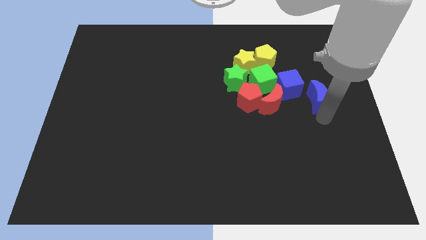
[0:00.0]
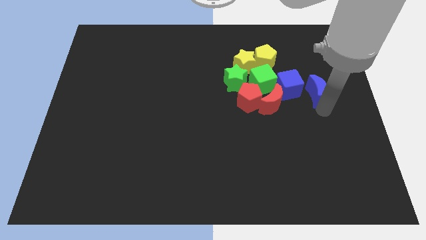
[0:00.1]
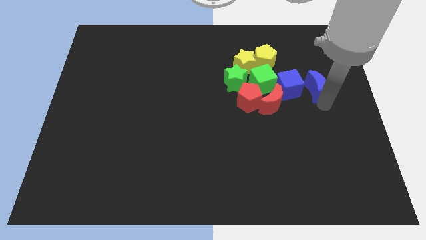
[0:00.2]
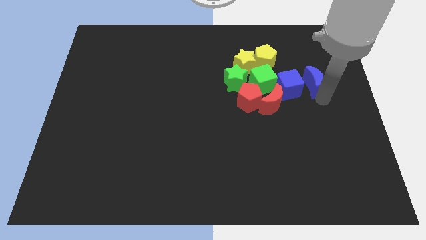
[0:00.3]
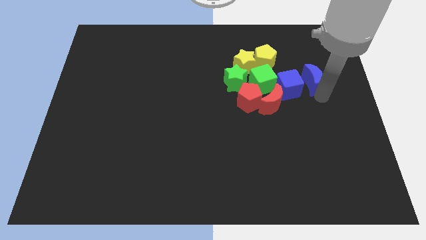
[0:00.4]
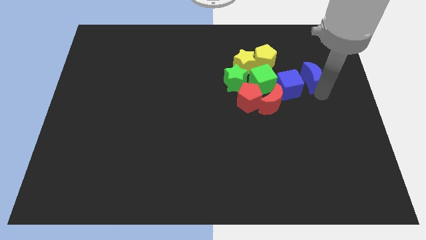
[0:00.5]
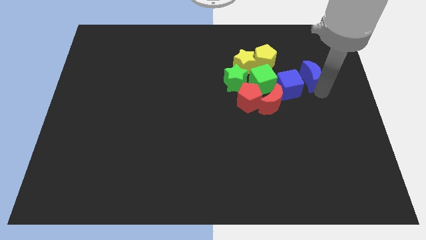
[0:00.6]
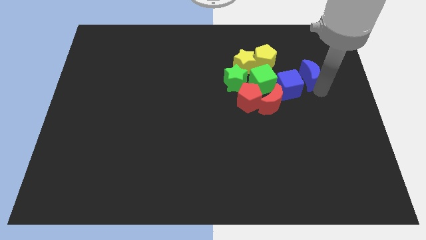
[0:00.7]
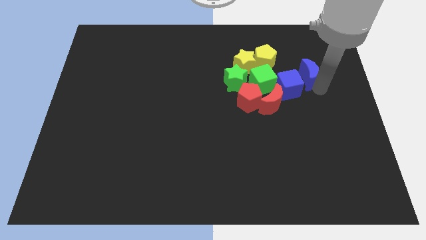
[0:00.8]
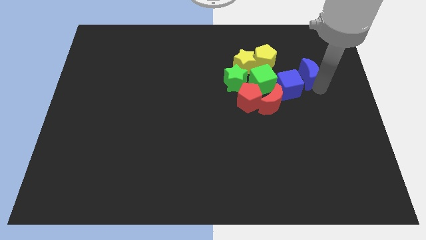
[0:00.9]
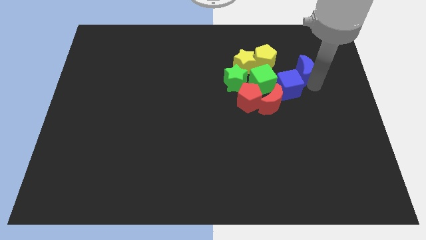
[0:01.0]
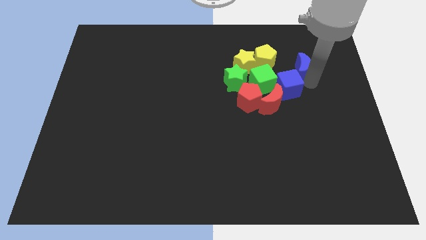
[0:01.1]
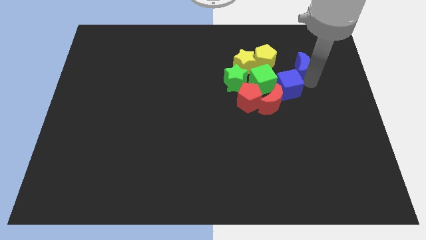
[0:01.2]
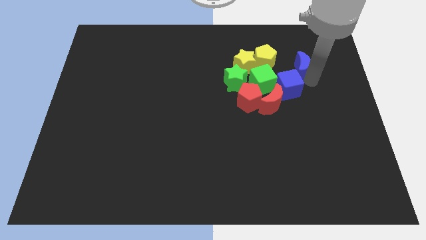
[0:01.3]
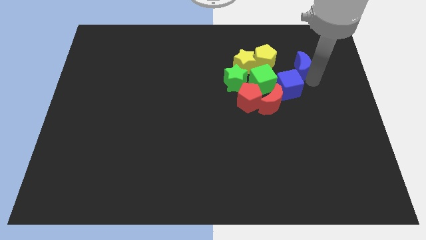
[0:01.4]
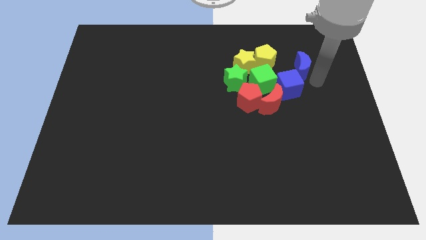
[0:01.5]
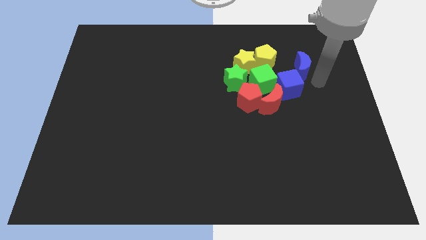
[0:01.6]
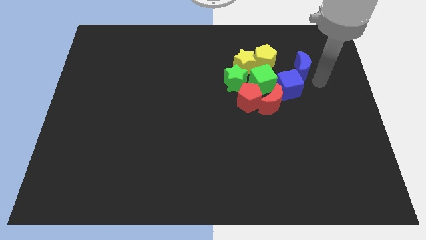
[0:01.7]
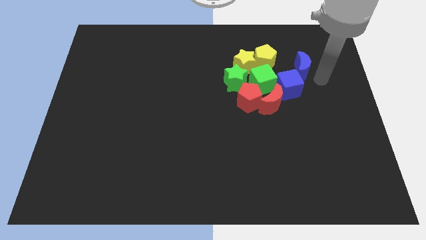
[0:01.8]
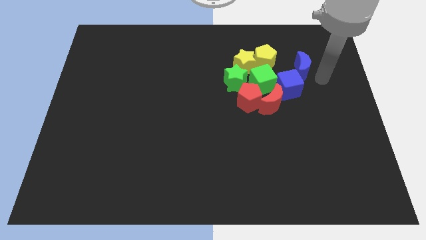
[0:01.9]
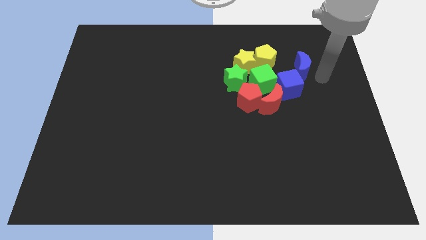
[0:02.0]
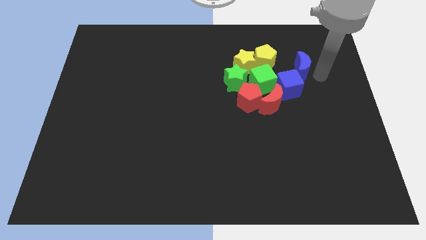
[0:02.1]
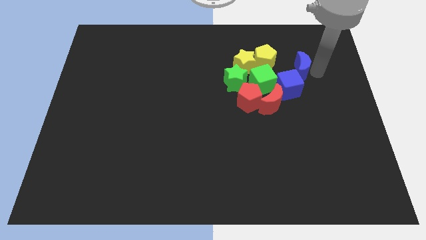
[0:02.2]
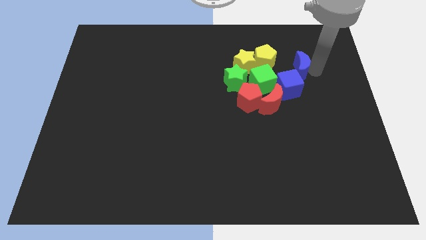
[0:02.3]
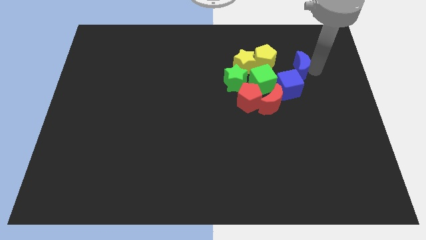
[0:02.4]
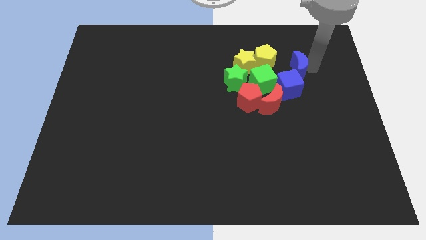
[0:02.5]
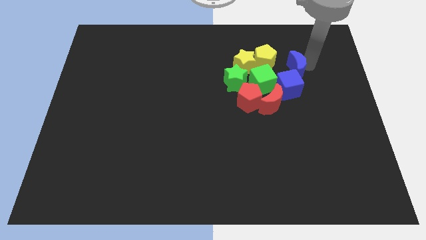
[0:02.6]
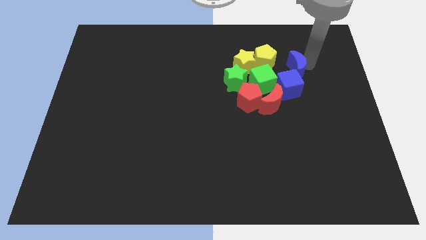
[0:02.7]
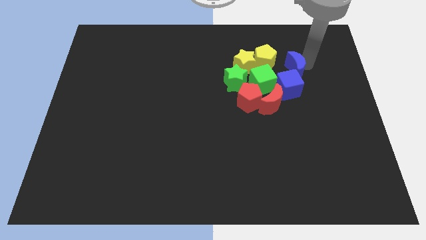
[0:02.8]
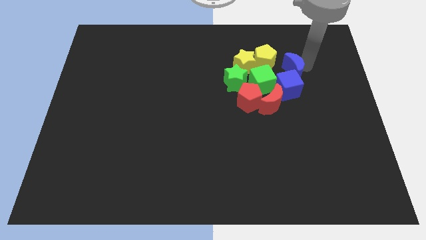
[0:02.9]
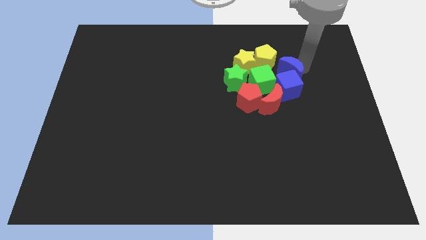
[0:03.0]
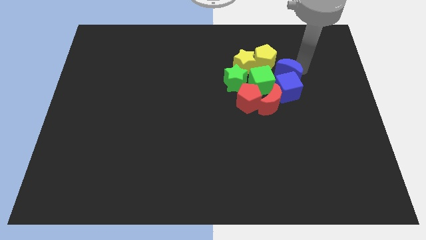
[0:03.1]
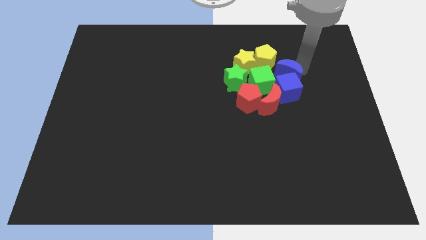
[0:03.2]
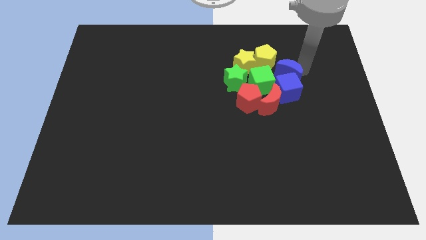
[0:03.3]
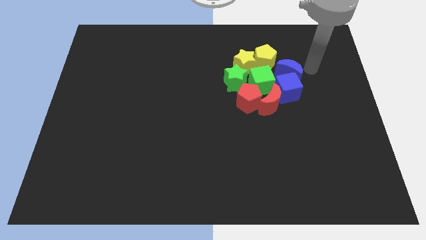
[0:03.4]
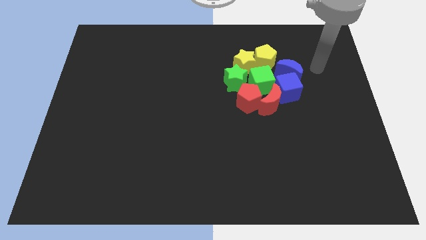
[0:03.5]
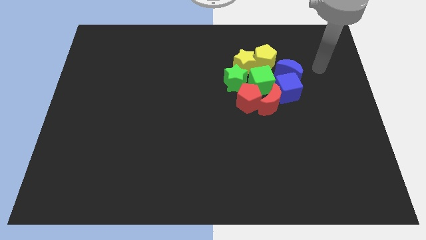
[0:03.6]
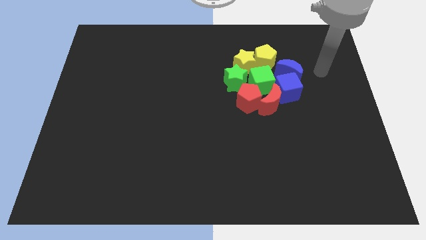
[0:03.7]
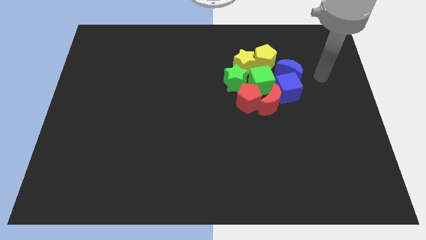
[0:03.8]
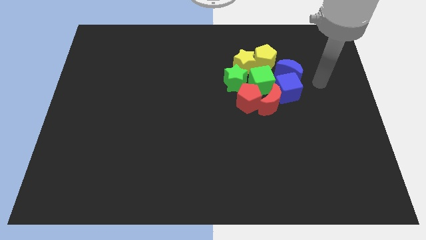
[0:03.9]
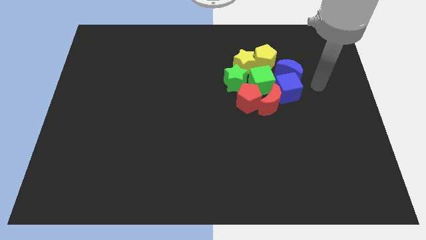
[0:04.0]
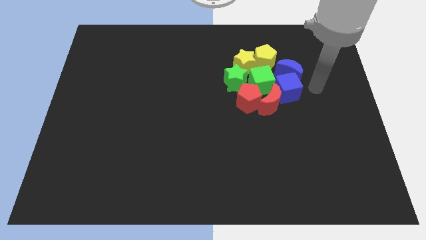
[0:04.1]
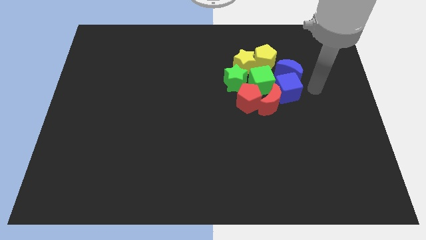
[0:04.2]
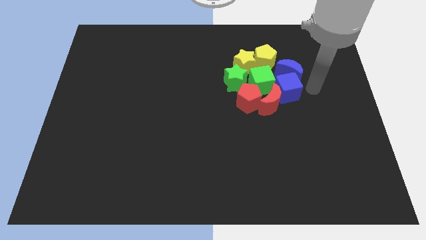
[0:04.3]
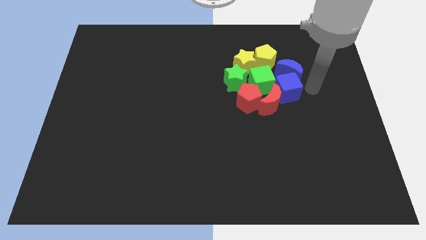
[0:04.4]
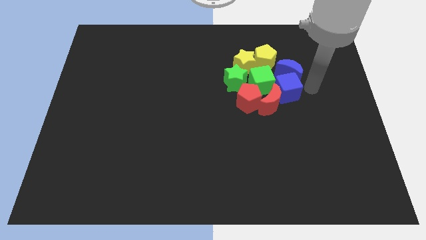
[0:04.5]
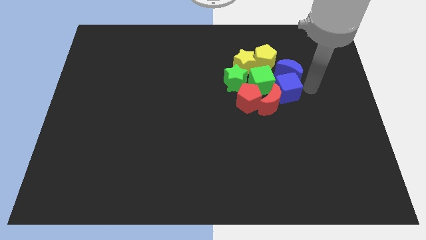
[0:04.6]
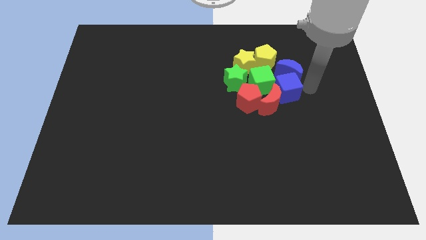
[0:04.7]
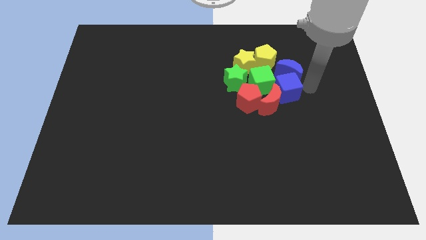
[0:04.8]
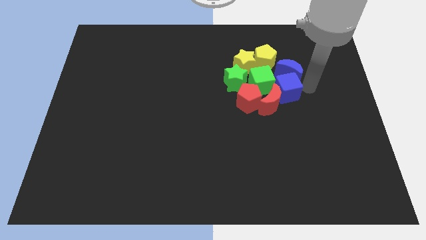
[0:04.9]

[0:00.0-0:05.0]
place blue crescent to the top of the blue cube

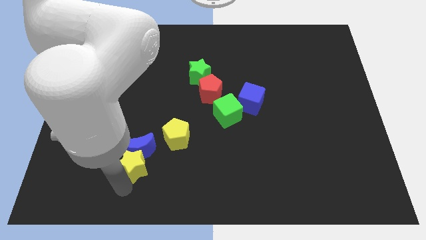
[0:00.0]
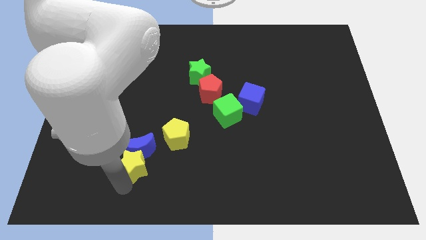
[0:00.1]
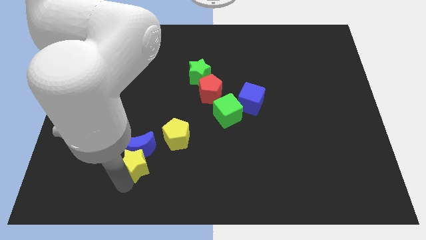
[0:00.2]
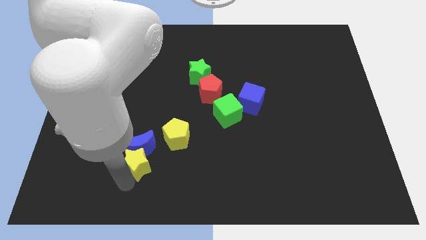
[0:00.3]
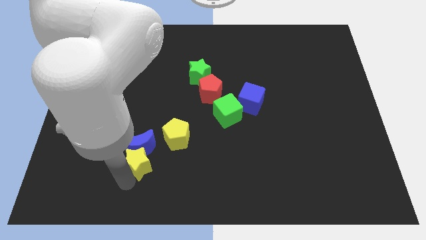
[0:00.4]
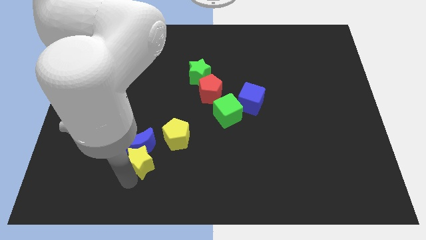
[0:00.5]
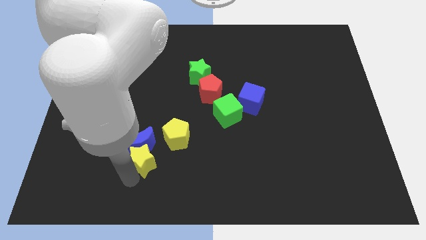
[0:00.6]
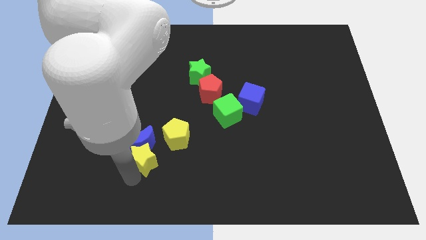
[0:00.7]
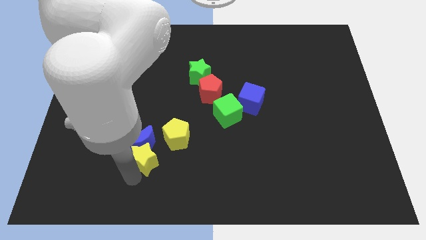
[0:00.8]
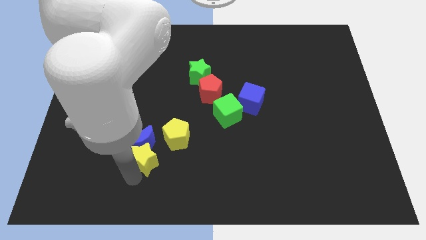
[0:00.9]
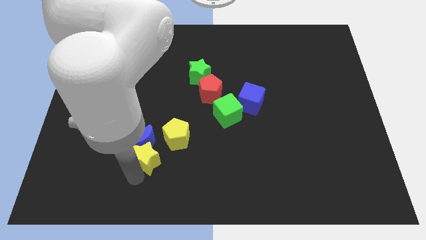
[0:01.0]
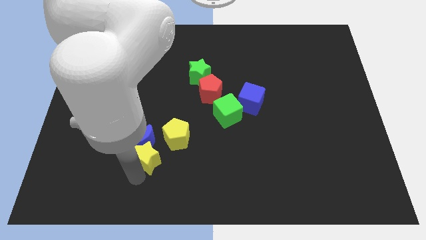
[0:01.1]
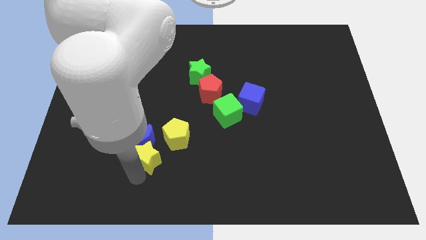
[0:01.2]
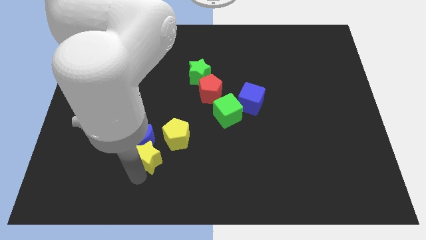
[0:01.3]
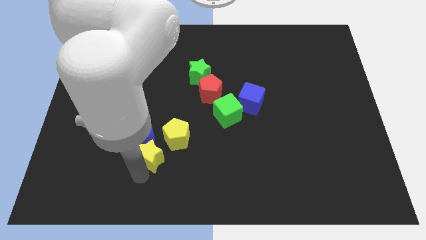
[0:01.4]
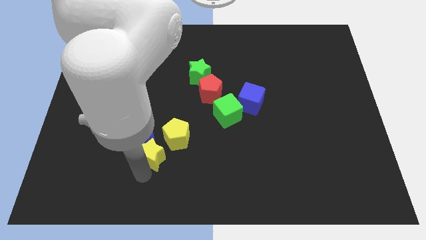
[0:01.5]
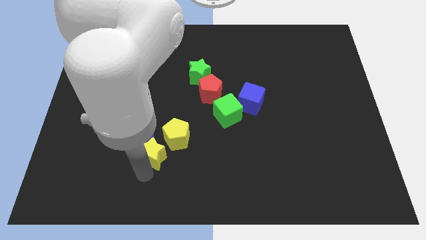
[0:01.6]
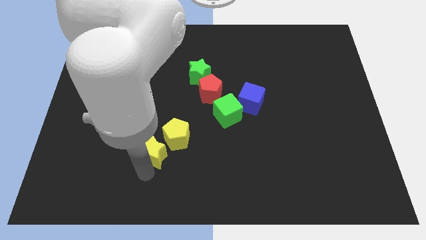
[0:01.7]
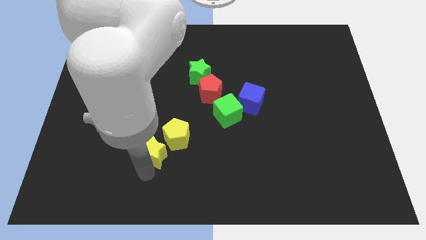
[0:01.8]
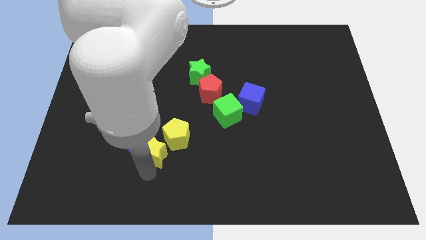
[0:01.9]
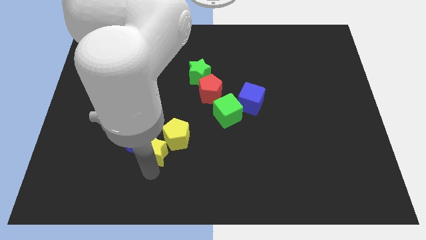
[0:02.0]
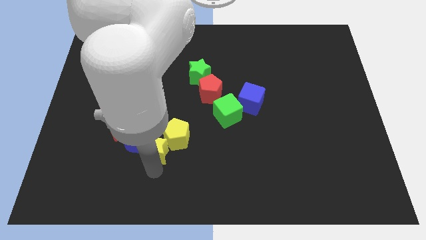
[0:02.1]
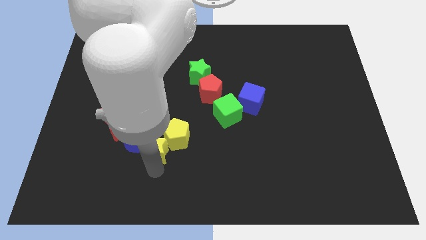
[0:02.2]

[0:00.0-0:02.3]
place the yellow star close to the yellow pentagon

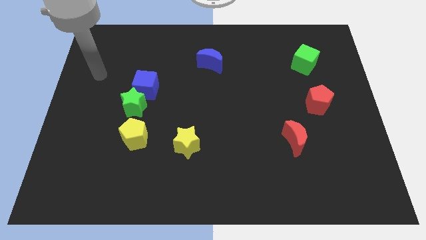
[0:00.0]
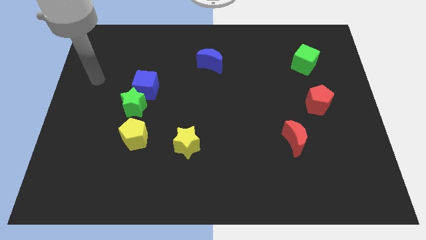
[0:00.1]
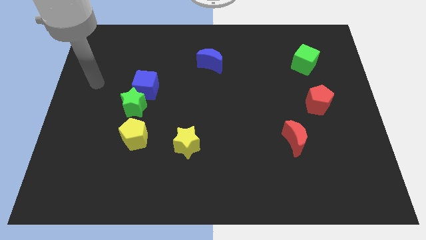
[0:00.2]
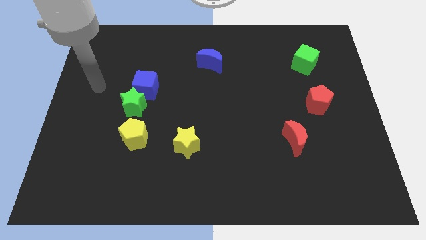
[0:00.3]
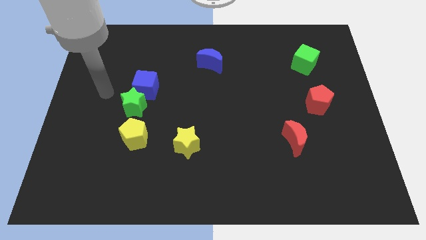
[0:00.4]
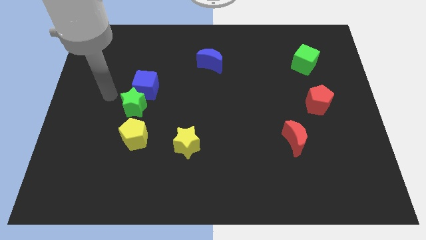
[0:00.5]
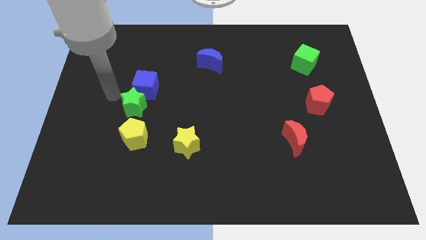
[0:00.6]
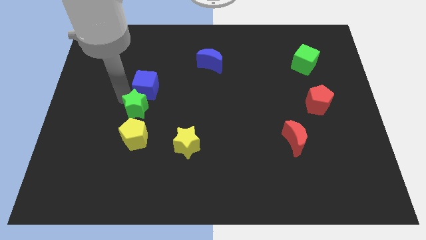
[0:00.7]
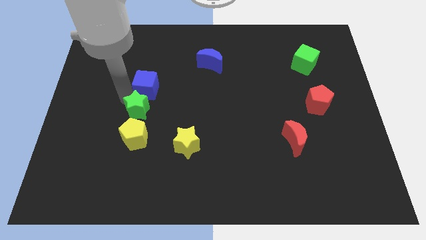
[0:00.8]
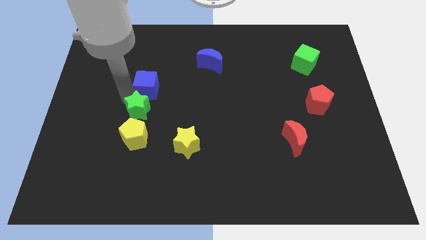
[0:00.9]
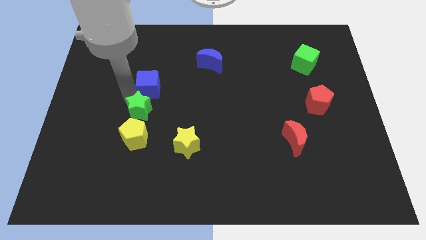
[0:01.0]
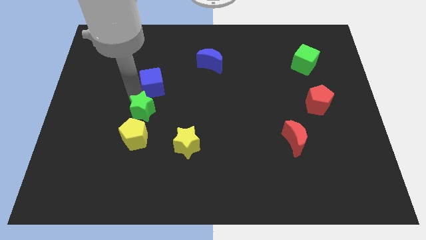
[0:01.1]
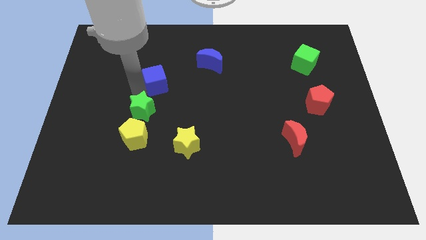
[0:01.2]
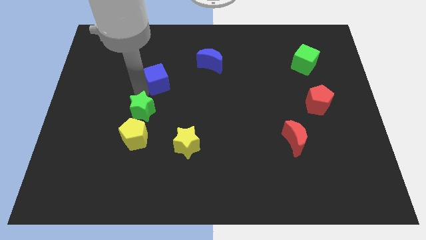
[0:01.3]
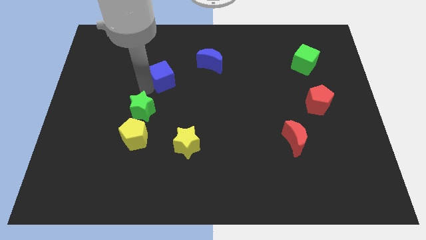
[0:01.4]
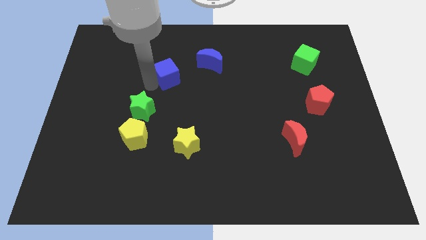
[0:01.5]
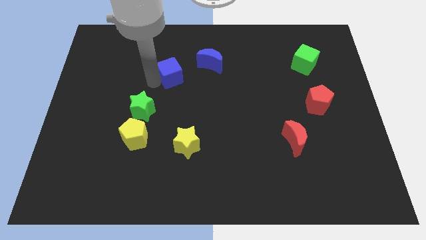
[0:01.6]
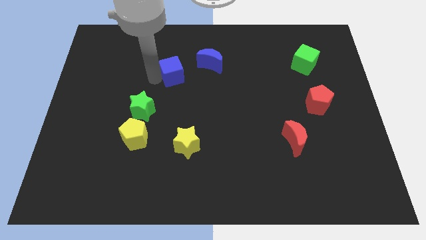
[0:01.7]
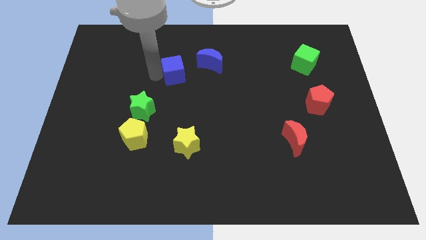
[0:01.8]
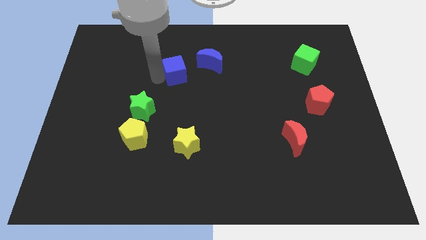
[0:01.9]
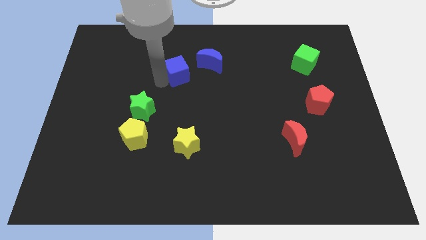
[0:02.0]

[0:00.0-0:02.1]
separate the blue cube from the green star
